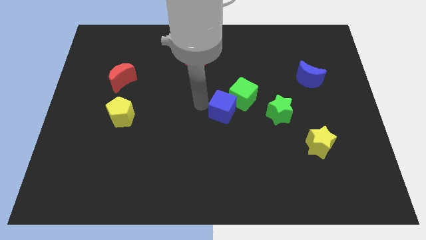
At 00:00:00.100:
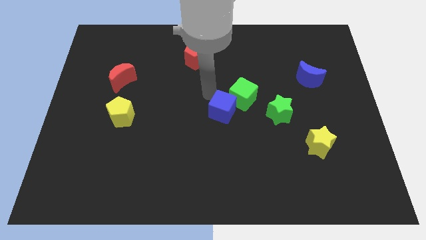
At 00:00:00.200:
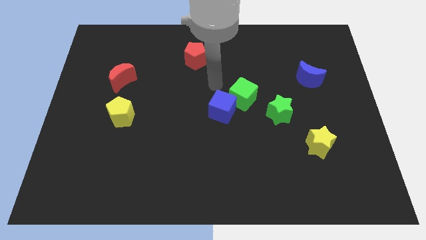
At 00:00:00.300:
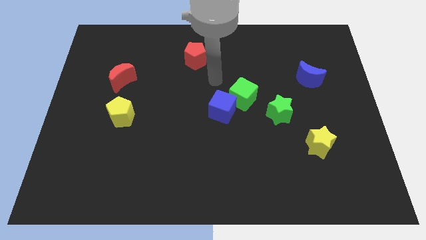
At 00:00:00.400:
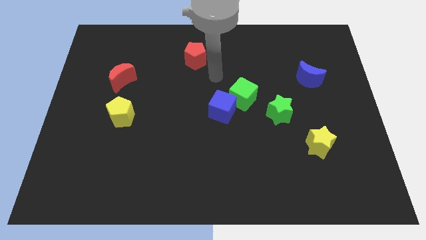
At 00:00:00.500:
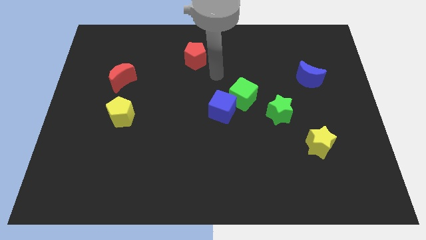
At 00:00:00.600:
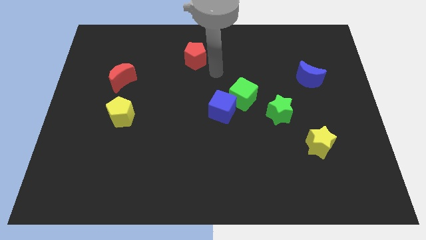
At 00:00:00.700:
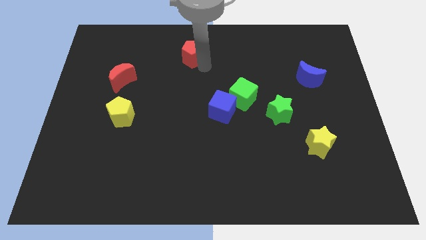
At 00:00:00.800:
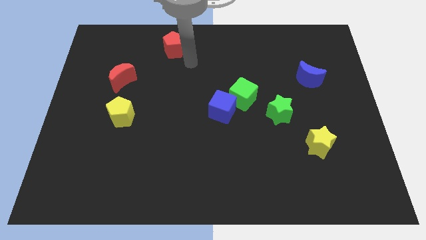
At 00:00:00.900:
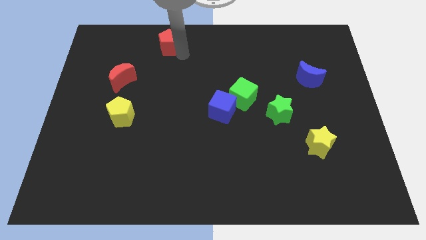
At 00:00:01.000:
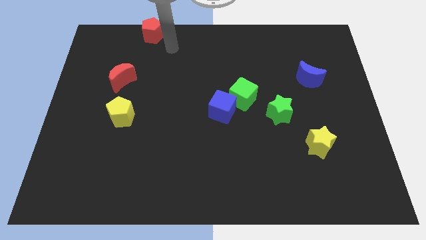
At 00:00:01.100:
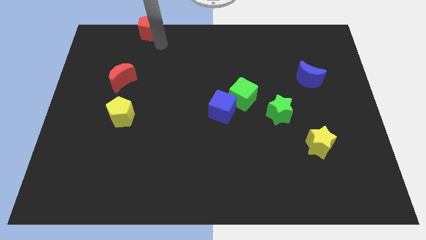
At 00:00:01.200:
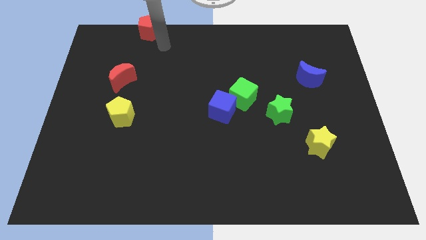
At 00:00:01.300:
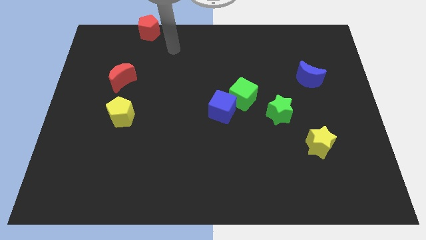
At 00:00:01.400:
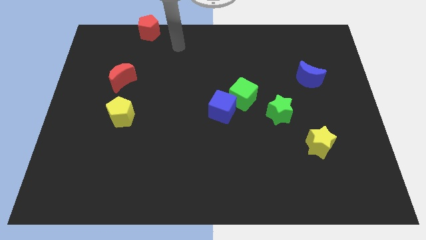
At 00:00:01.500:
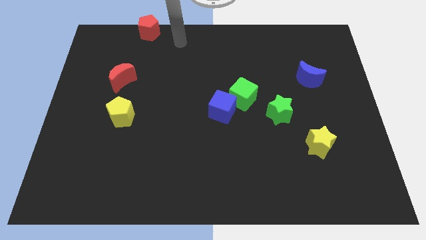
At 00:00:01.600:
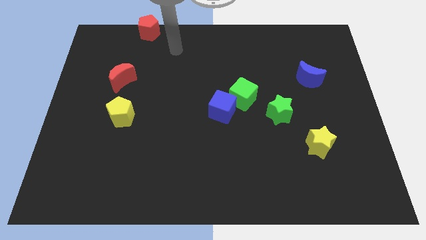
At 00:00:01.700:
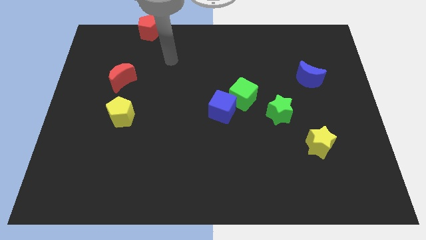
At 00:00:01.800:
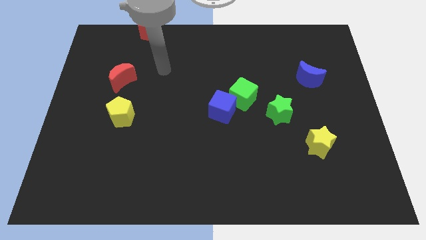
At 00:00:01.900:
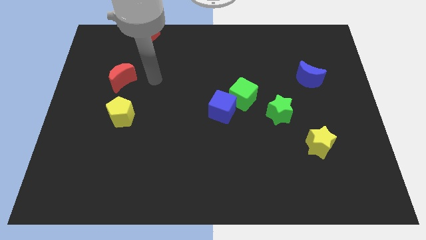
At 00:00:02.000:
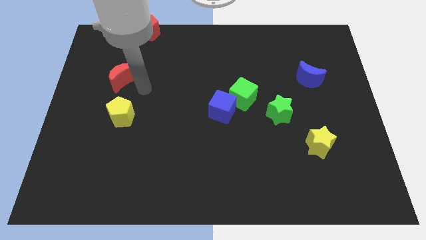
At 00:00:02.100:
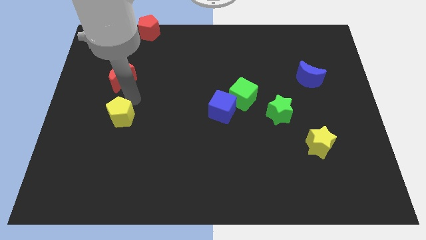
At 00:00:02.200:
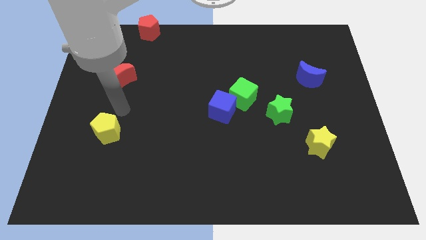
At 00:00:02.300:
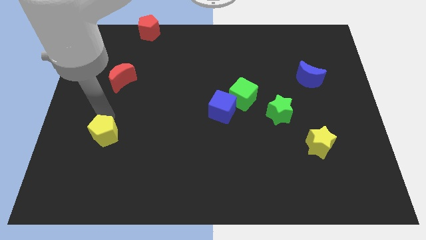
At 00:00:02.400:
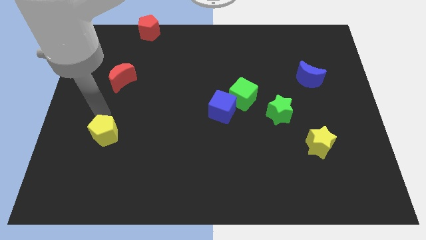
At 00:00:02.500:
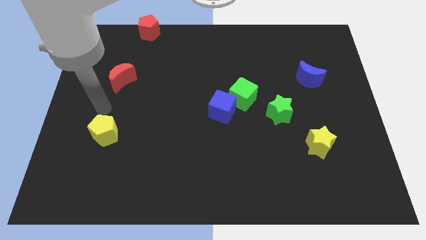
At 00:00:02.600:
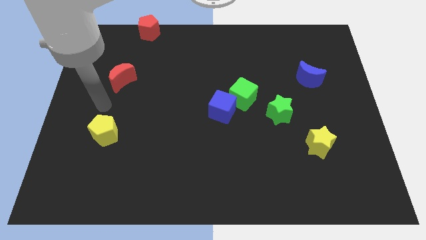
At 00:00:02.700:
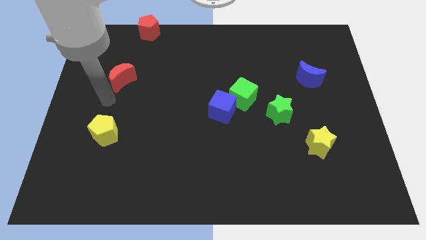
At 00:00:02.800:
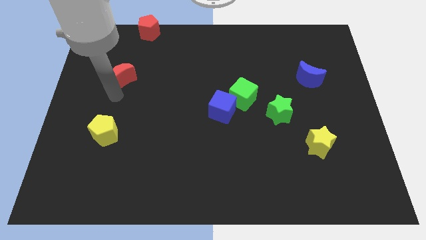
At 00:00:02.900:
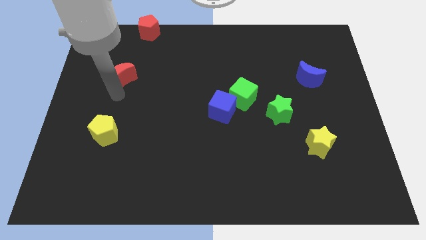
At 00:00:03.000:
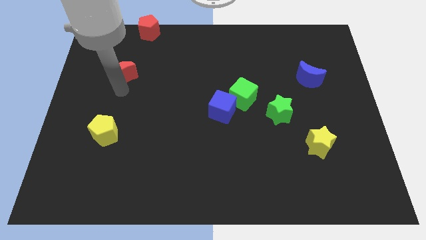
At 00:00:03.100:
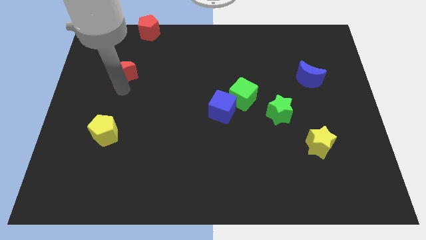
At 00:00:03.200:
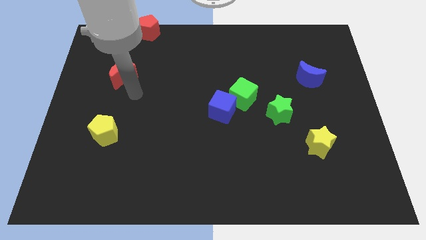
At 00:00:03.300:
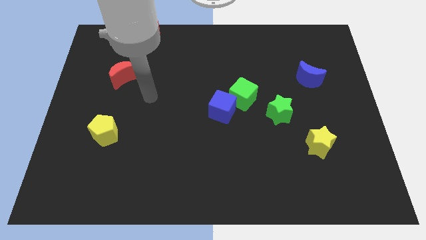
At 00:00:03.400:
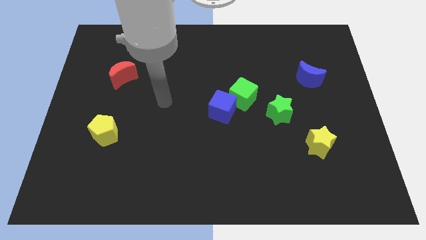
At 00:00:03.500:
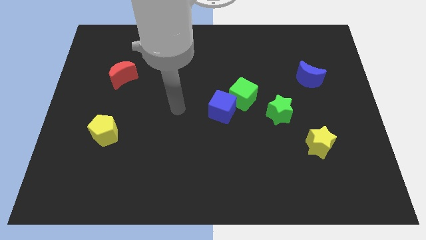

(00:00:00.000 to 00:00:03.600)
place the red pentagon and red moon in a diagonal form towards the left

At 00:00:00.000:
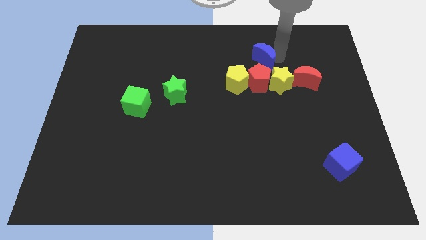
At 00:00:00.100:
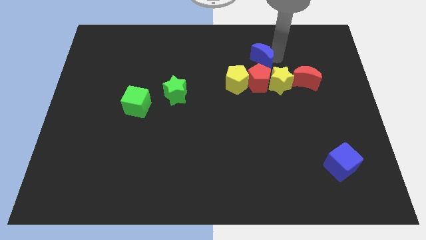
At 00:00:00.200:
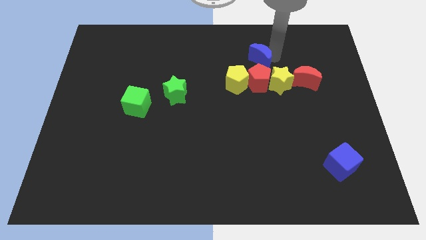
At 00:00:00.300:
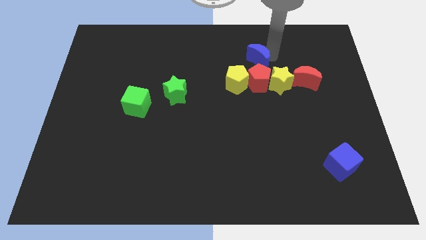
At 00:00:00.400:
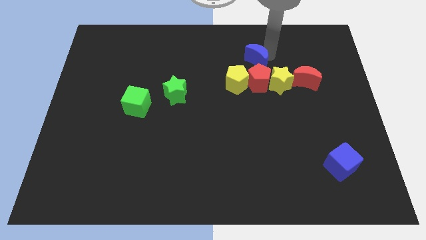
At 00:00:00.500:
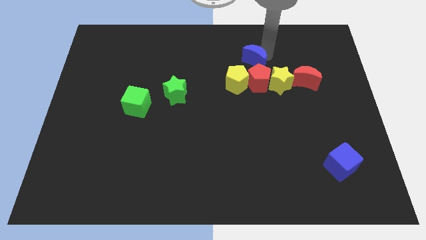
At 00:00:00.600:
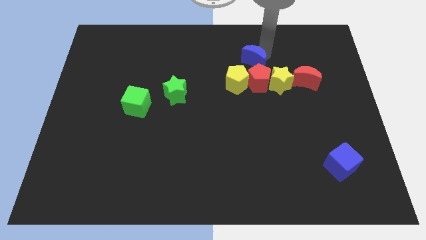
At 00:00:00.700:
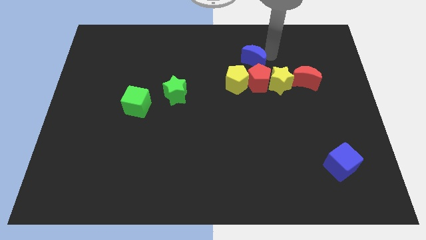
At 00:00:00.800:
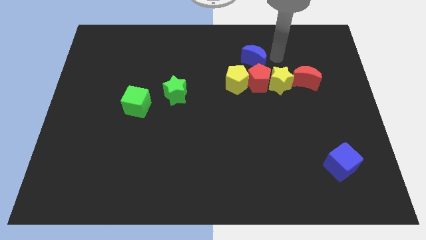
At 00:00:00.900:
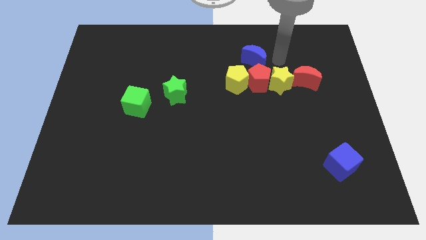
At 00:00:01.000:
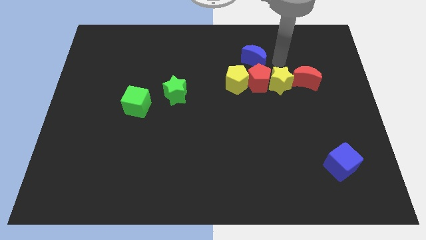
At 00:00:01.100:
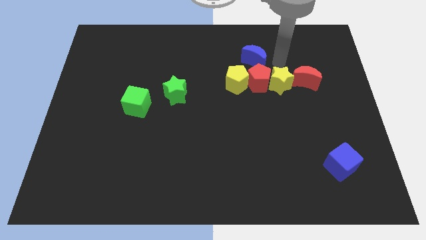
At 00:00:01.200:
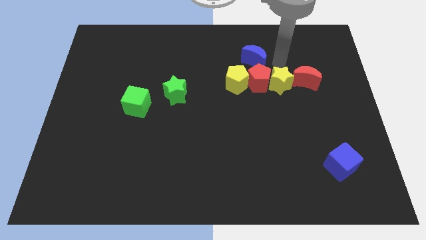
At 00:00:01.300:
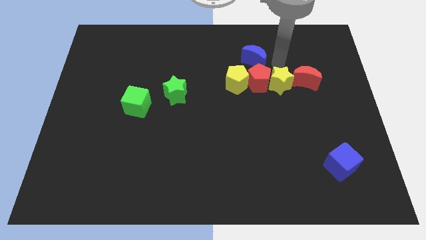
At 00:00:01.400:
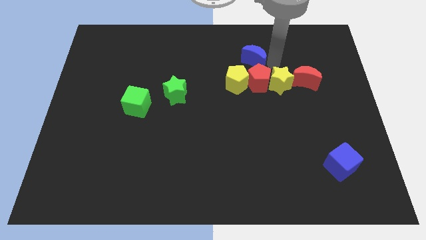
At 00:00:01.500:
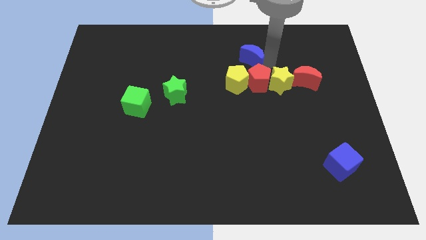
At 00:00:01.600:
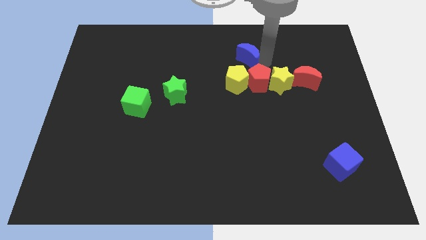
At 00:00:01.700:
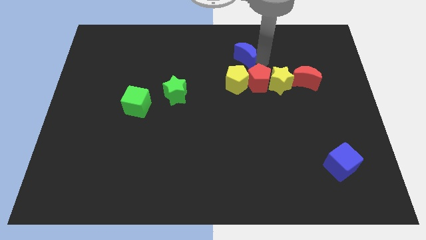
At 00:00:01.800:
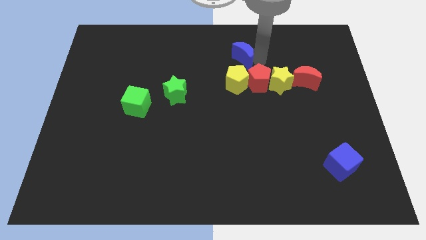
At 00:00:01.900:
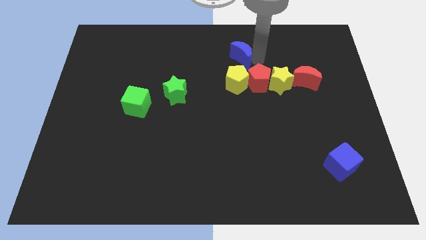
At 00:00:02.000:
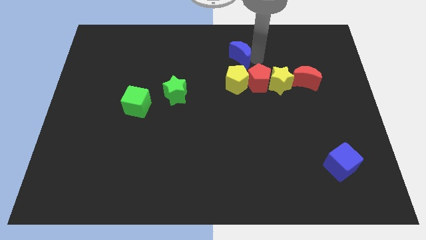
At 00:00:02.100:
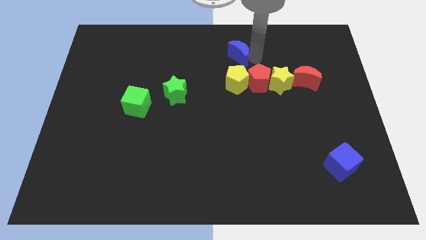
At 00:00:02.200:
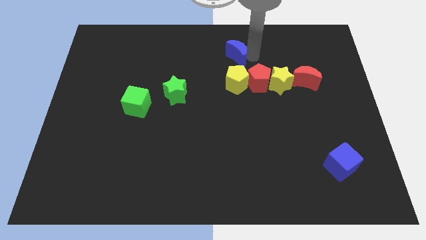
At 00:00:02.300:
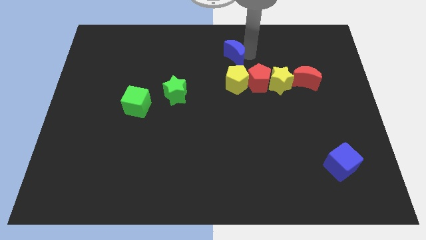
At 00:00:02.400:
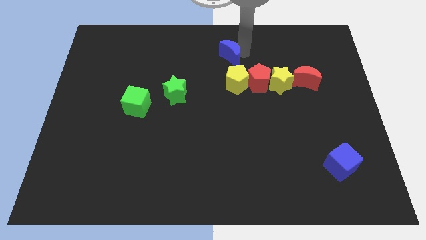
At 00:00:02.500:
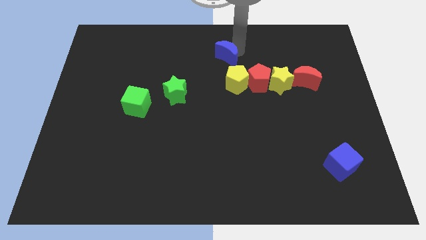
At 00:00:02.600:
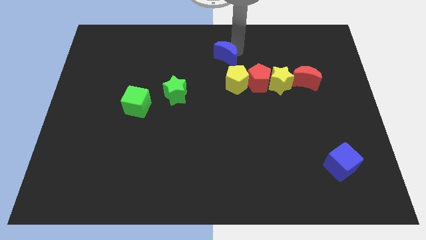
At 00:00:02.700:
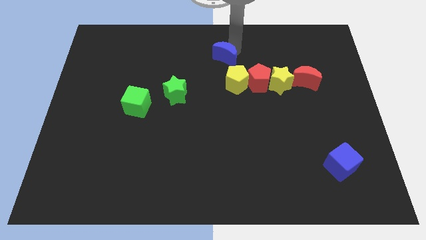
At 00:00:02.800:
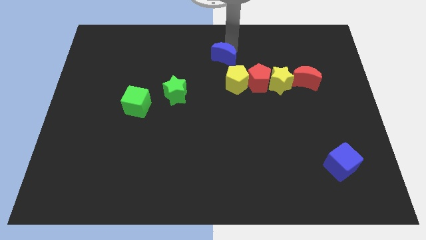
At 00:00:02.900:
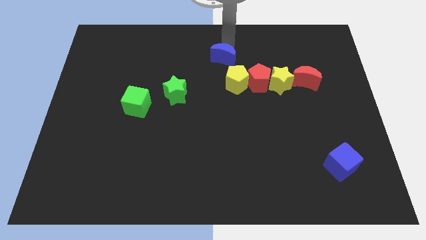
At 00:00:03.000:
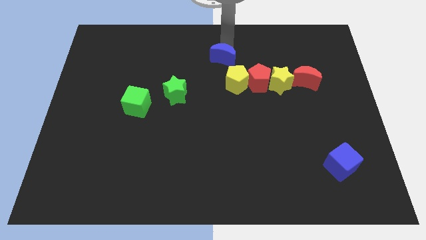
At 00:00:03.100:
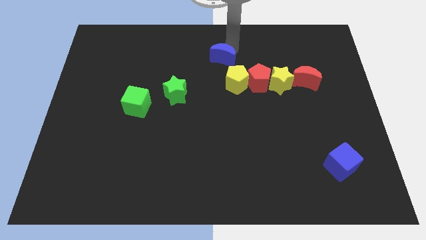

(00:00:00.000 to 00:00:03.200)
move blue moon middle of the board

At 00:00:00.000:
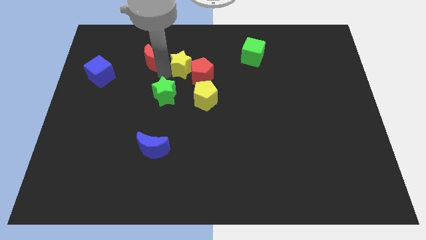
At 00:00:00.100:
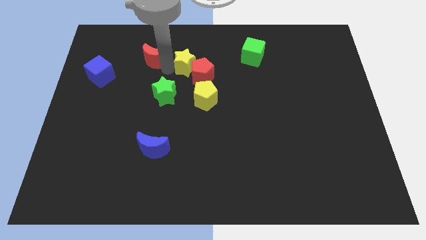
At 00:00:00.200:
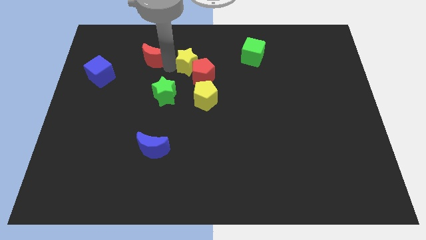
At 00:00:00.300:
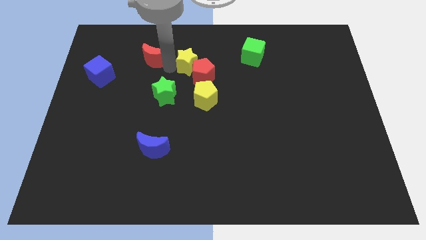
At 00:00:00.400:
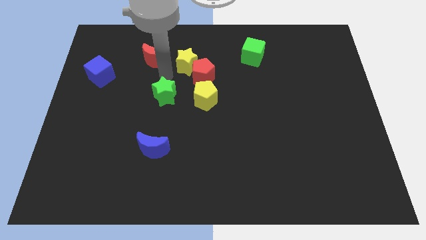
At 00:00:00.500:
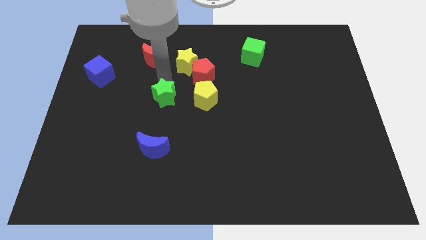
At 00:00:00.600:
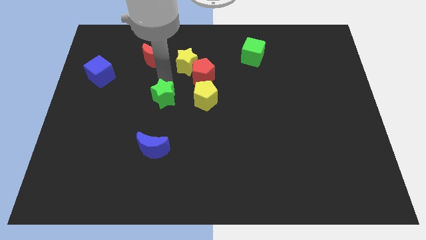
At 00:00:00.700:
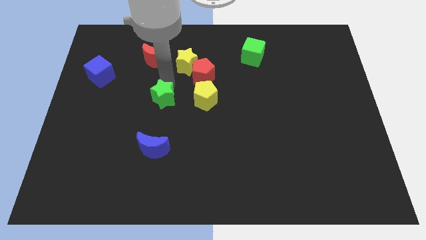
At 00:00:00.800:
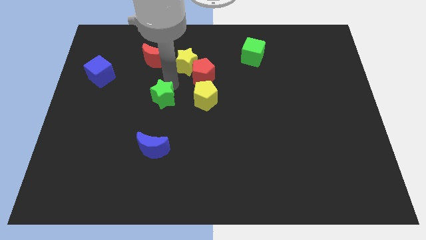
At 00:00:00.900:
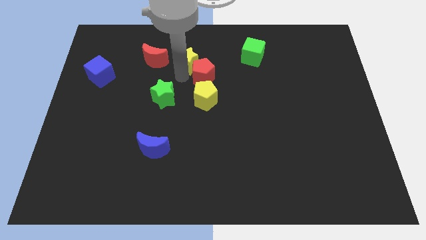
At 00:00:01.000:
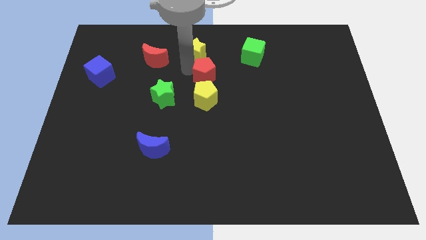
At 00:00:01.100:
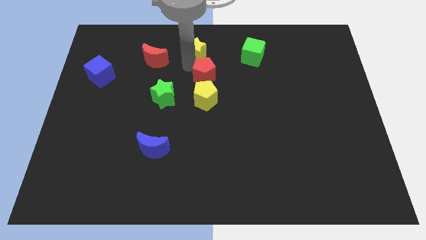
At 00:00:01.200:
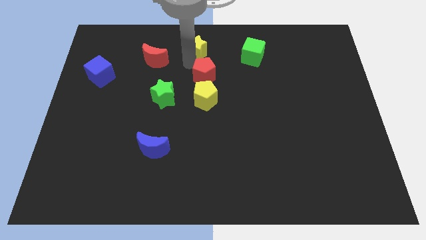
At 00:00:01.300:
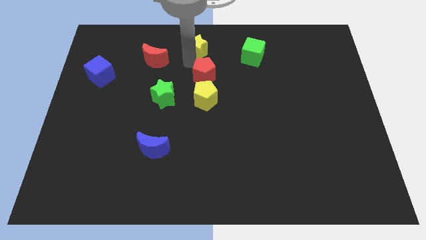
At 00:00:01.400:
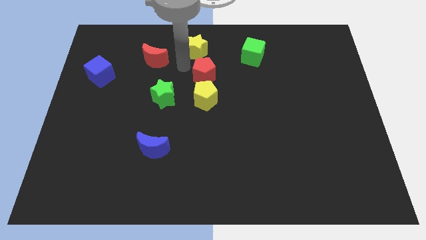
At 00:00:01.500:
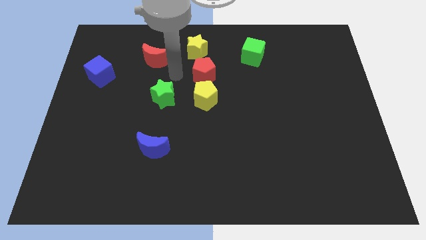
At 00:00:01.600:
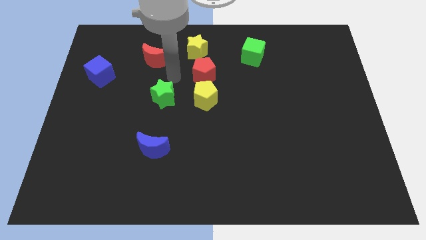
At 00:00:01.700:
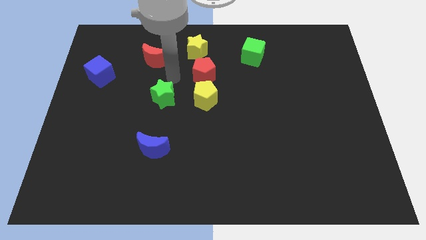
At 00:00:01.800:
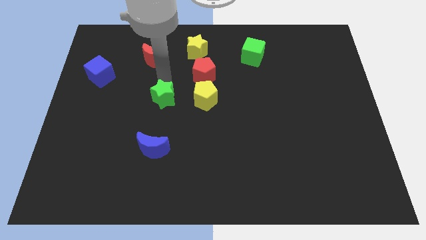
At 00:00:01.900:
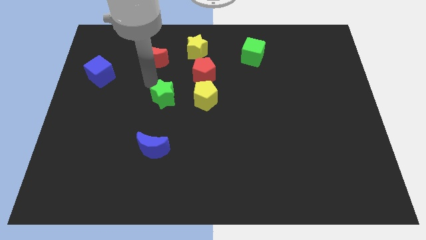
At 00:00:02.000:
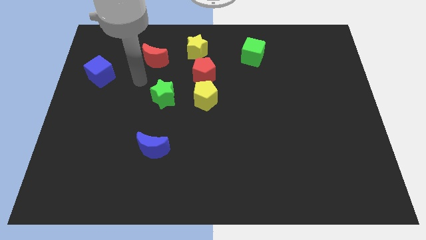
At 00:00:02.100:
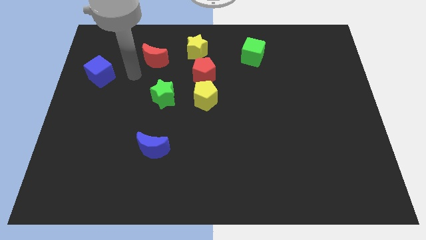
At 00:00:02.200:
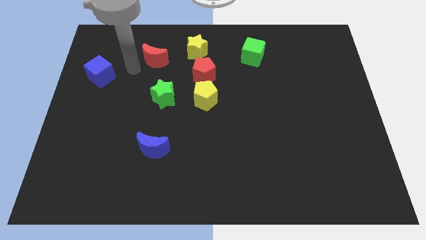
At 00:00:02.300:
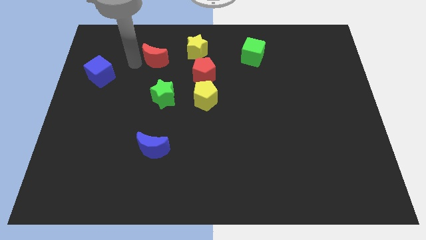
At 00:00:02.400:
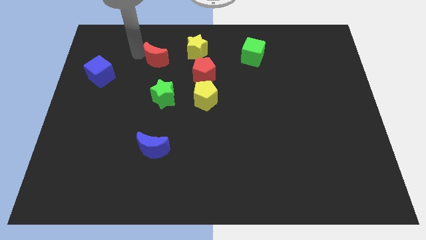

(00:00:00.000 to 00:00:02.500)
place the arm left to the red moon
